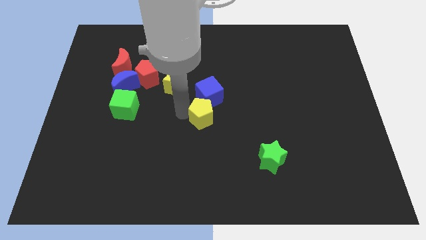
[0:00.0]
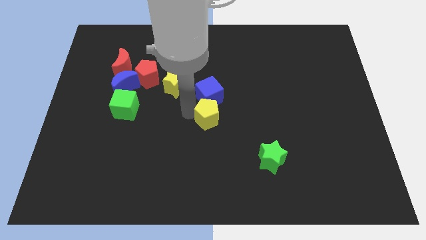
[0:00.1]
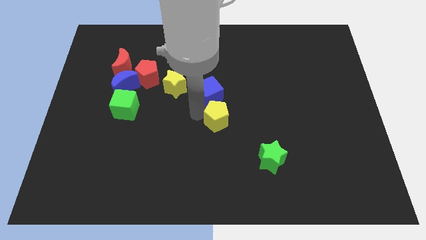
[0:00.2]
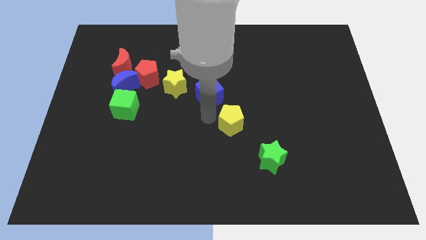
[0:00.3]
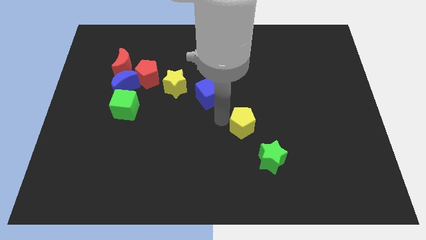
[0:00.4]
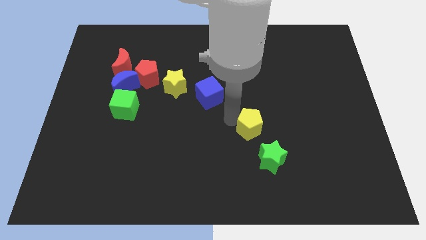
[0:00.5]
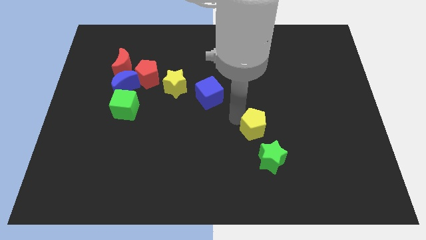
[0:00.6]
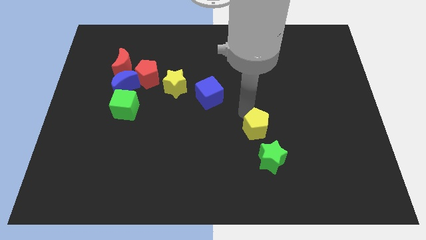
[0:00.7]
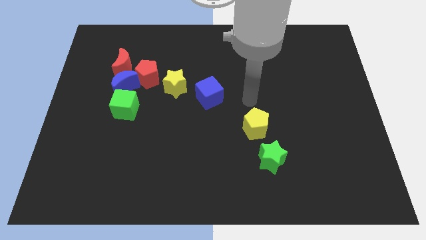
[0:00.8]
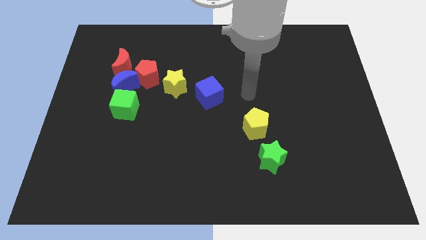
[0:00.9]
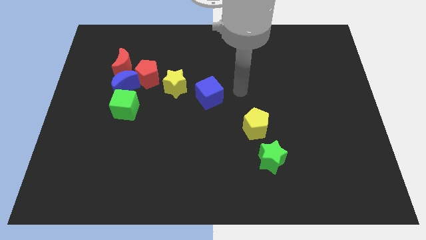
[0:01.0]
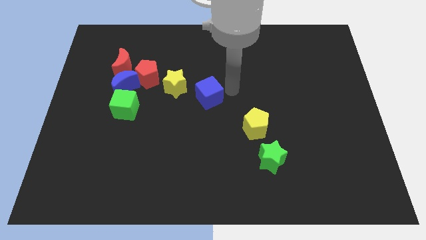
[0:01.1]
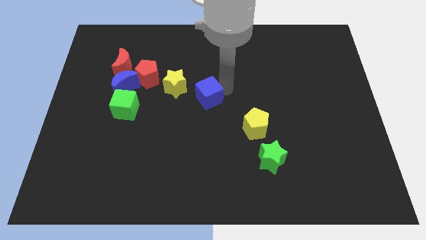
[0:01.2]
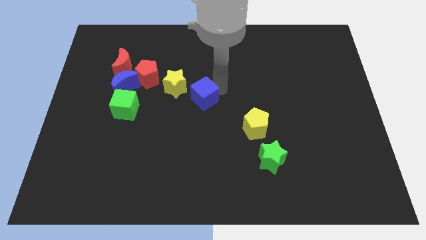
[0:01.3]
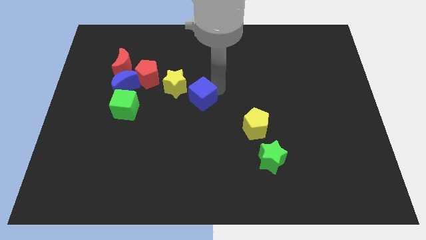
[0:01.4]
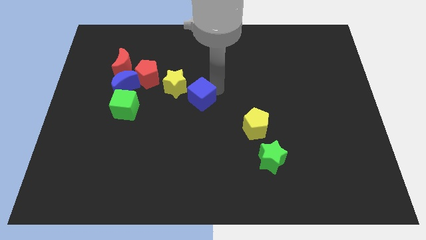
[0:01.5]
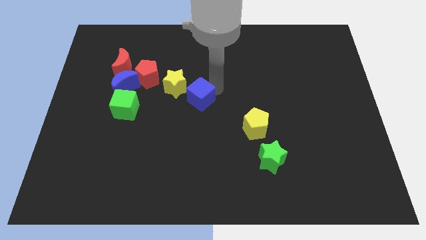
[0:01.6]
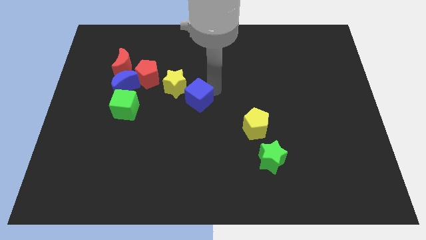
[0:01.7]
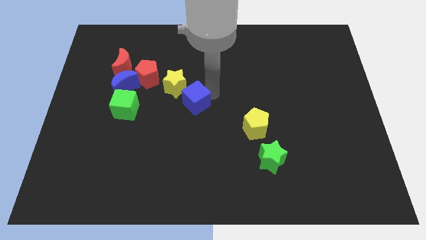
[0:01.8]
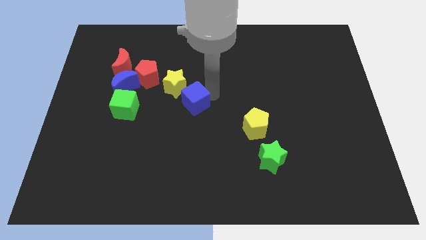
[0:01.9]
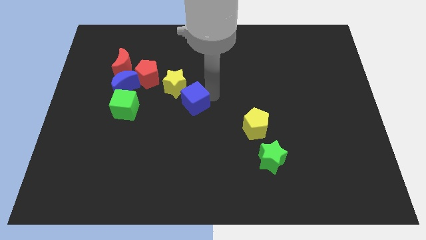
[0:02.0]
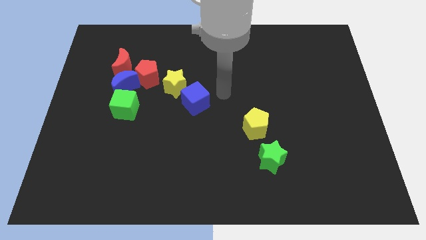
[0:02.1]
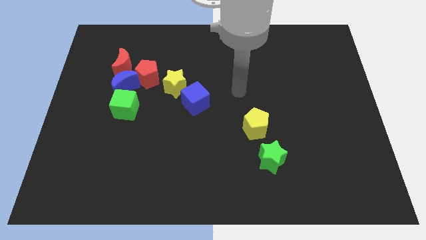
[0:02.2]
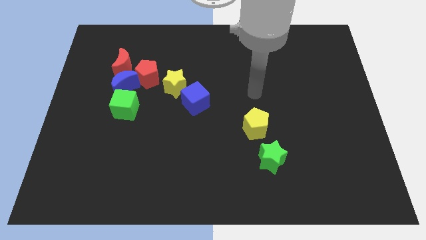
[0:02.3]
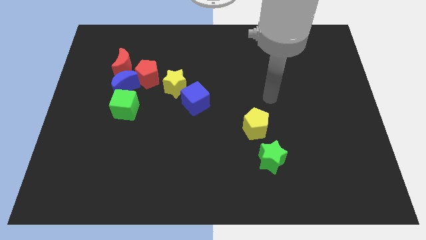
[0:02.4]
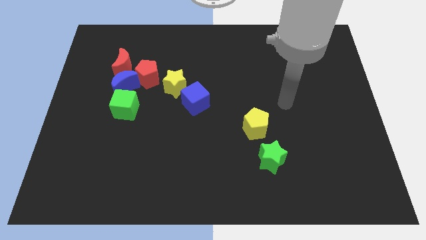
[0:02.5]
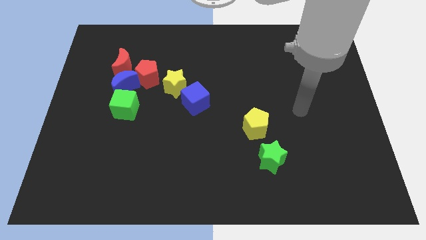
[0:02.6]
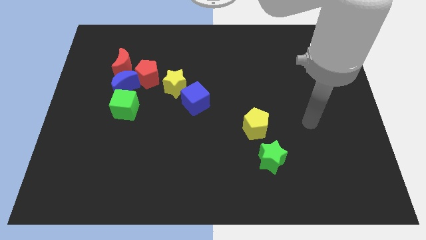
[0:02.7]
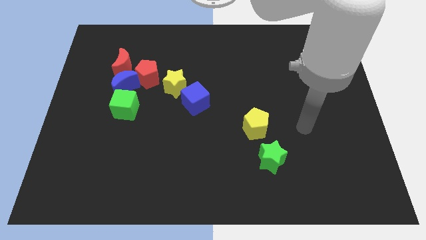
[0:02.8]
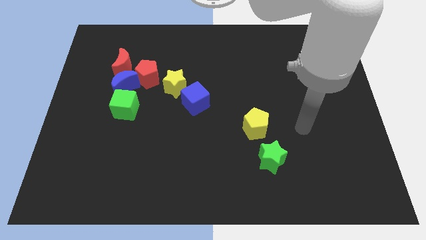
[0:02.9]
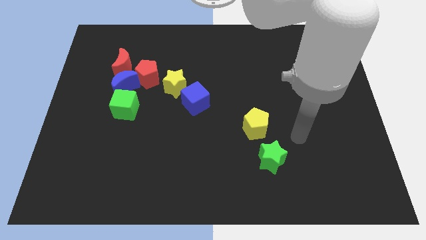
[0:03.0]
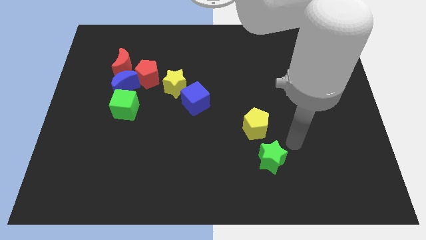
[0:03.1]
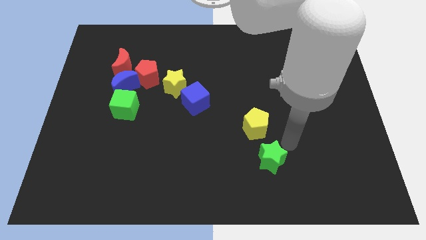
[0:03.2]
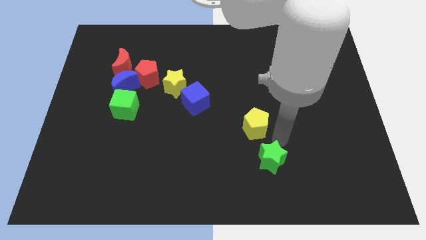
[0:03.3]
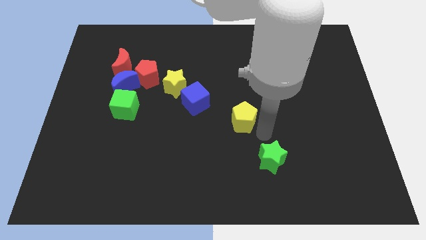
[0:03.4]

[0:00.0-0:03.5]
drag the yellow pentagon and place it above the green star

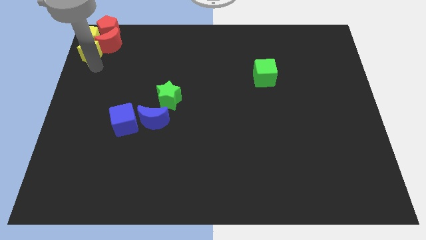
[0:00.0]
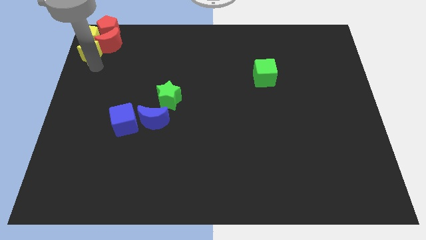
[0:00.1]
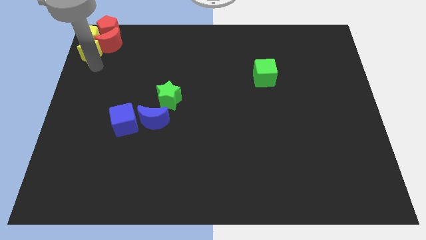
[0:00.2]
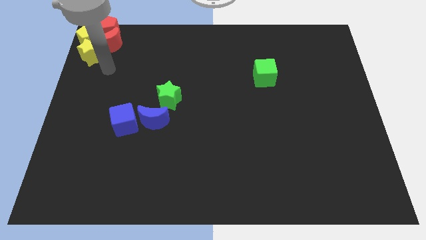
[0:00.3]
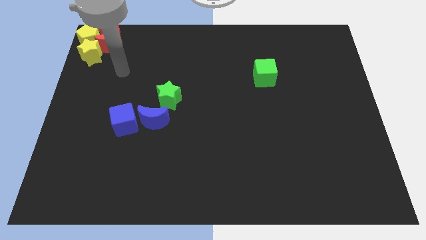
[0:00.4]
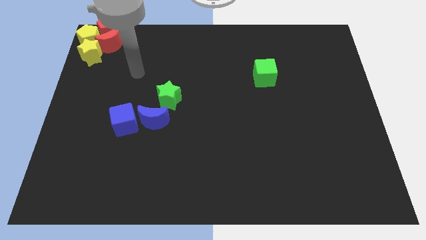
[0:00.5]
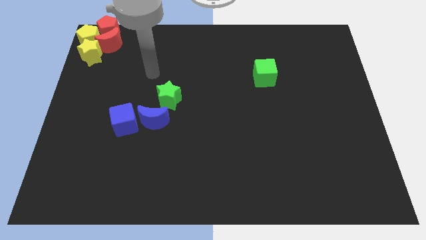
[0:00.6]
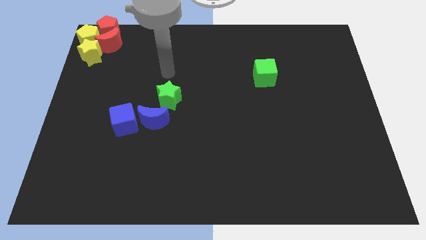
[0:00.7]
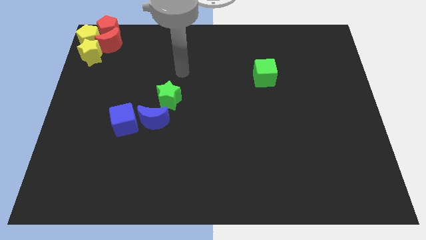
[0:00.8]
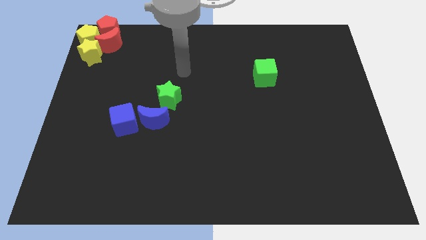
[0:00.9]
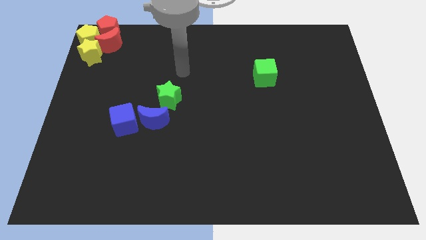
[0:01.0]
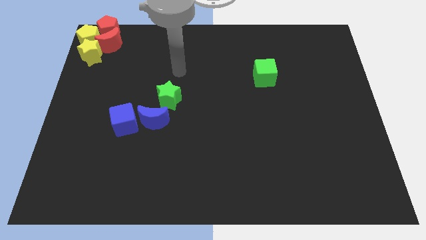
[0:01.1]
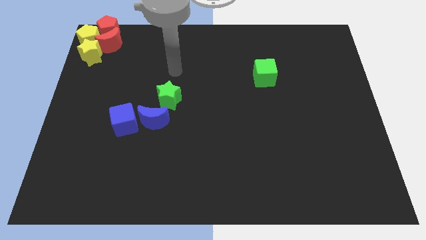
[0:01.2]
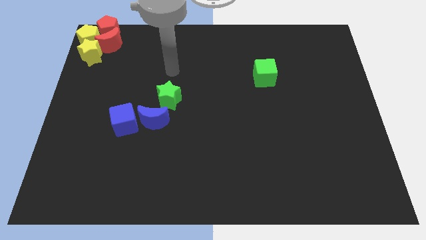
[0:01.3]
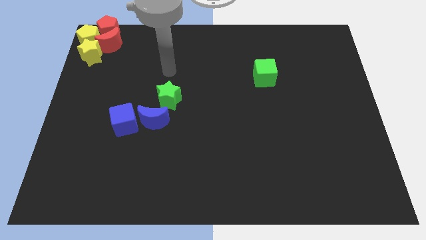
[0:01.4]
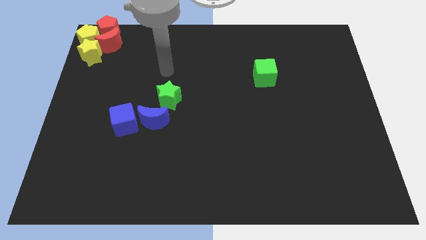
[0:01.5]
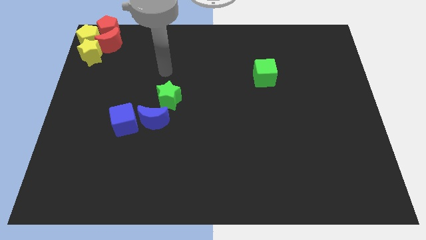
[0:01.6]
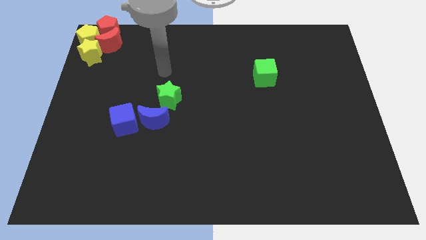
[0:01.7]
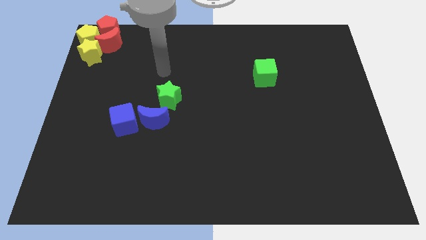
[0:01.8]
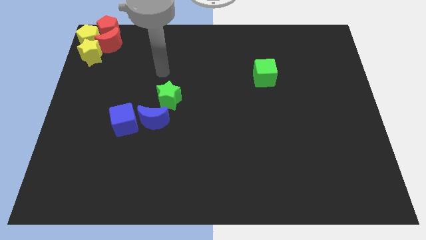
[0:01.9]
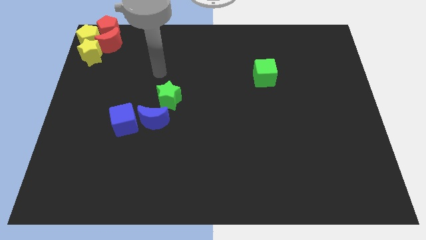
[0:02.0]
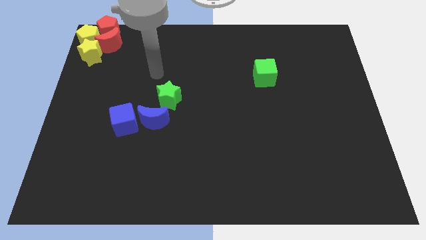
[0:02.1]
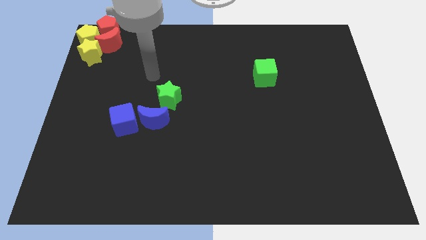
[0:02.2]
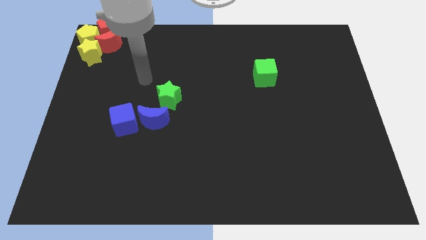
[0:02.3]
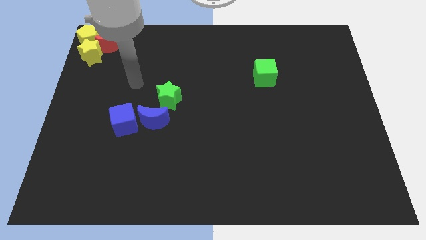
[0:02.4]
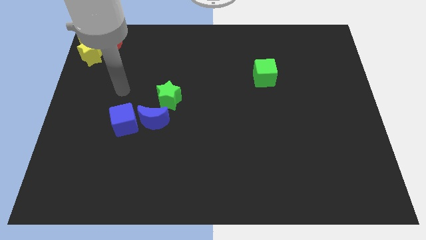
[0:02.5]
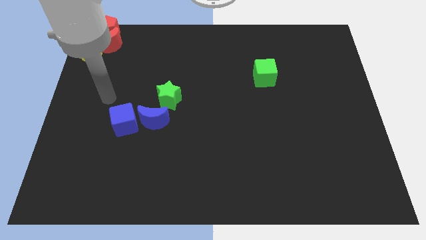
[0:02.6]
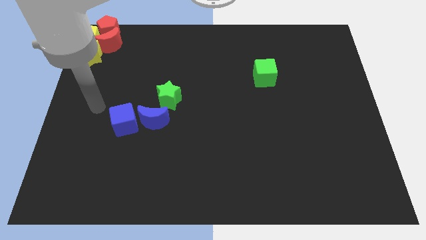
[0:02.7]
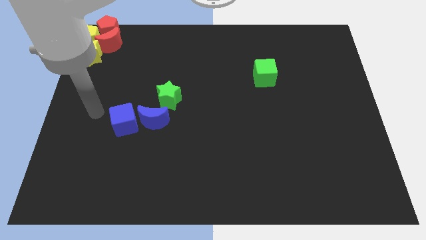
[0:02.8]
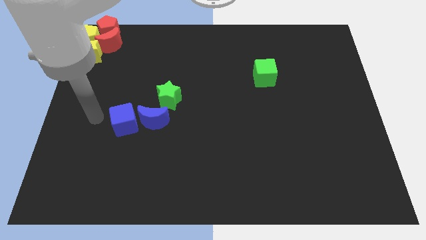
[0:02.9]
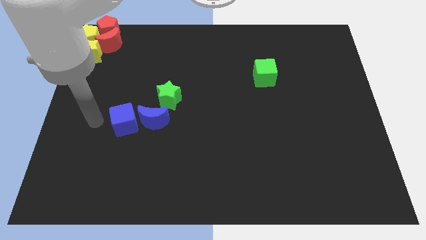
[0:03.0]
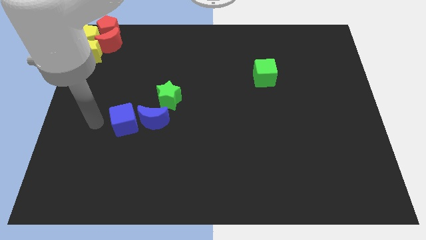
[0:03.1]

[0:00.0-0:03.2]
move your arm to the left of blue cube

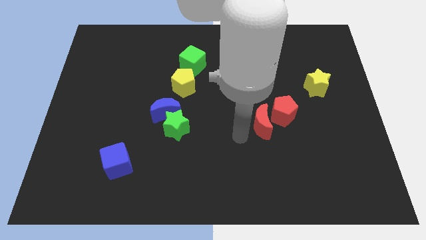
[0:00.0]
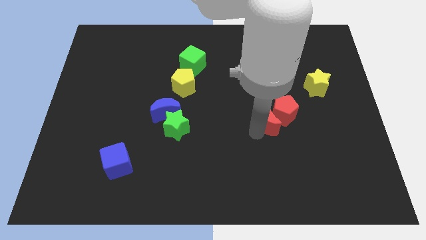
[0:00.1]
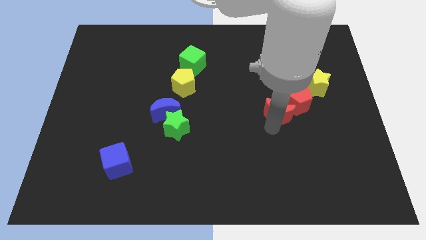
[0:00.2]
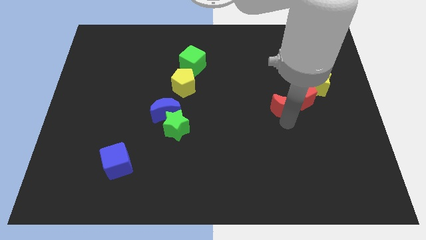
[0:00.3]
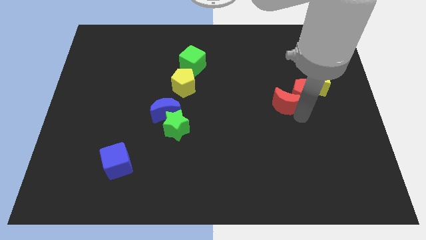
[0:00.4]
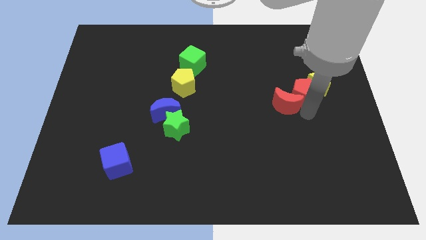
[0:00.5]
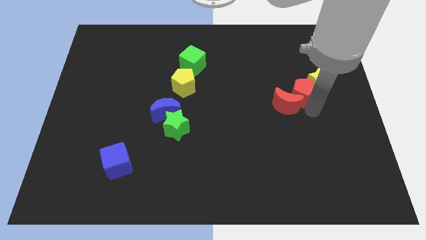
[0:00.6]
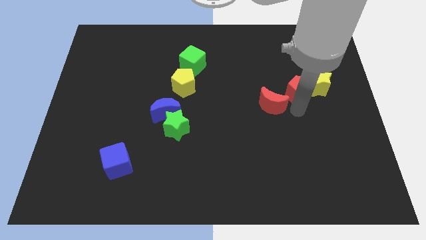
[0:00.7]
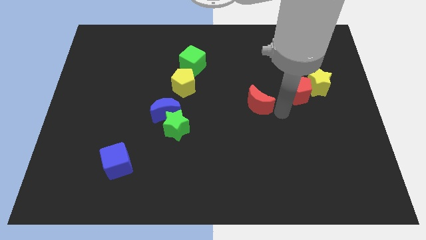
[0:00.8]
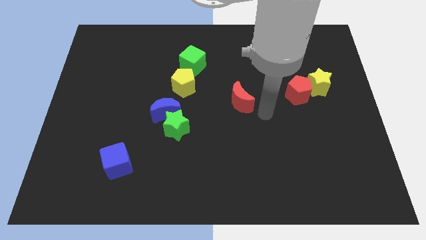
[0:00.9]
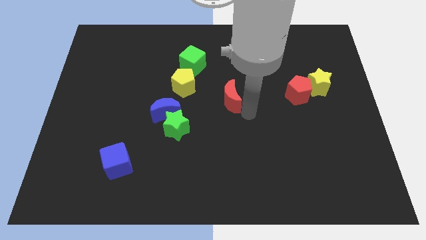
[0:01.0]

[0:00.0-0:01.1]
separate the red crescent from red pentagon

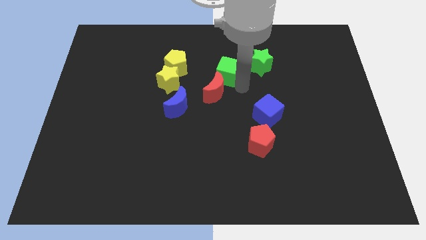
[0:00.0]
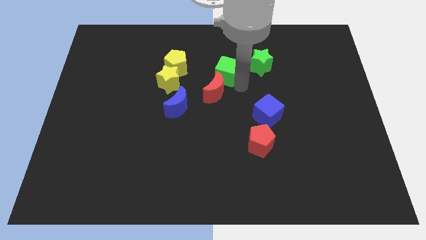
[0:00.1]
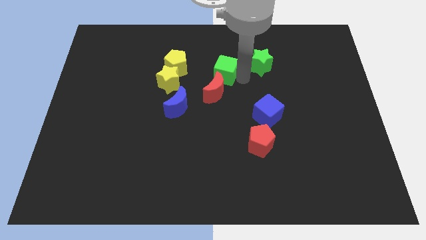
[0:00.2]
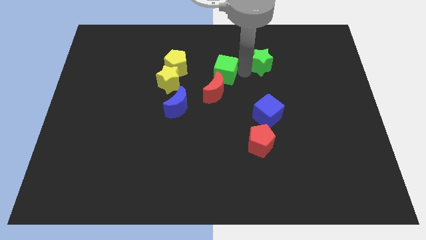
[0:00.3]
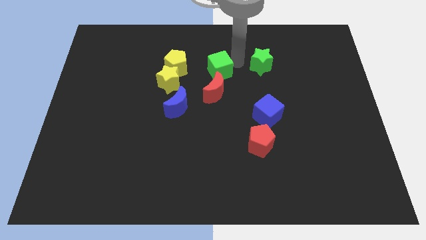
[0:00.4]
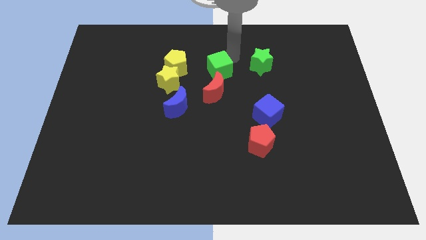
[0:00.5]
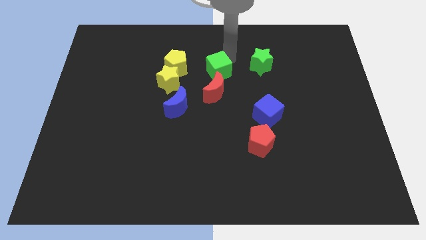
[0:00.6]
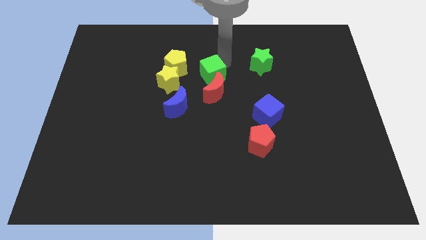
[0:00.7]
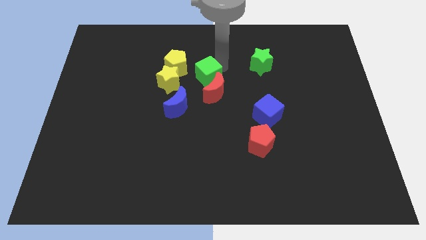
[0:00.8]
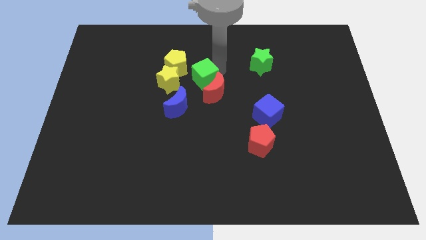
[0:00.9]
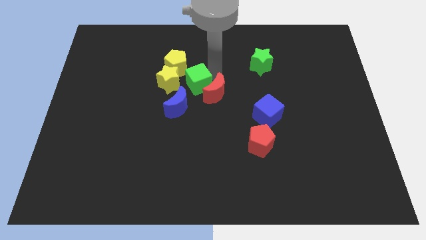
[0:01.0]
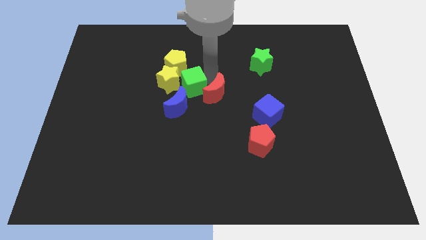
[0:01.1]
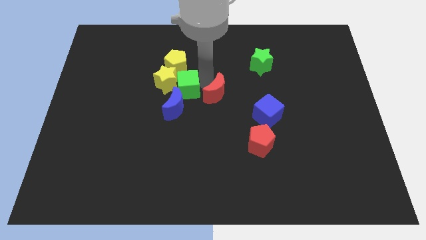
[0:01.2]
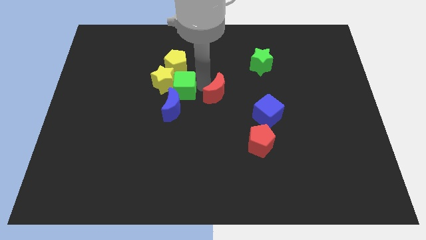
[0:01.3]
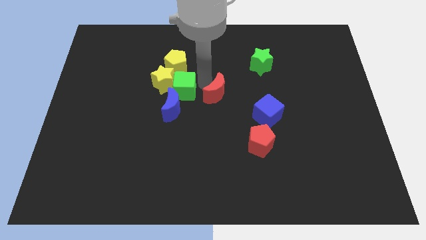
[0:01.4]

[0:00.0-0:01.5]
slide the green cube into the yellow star
